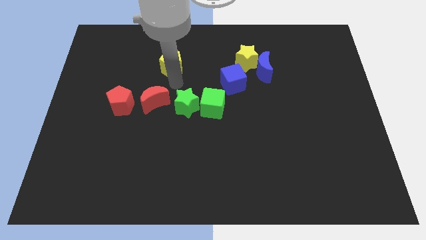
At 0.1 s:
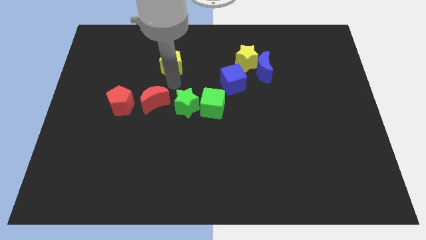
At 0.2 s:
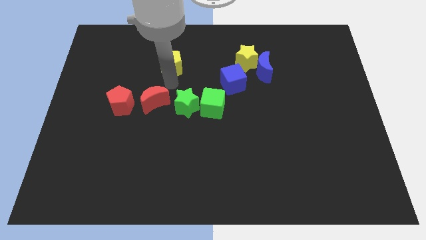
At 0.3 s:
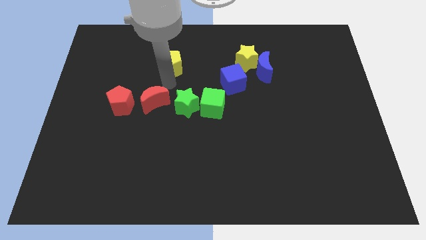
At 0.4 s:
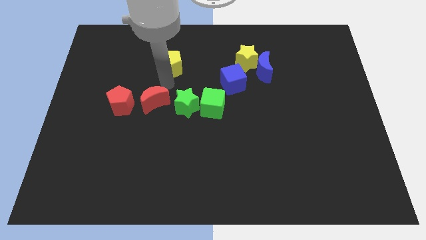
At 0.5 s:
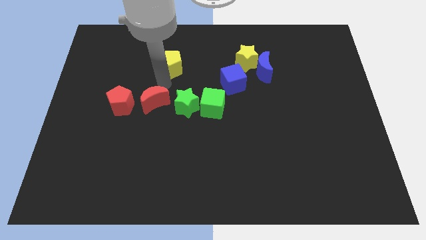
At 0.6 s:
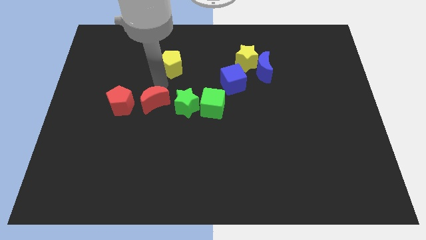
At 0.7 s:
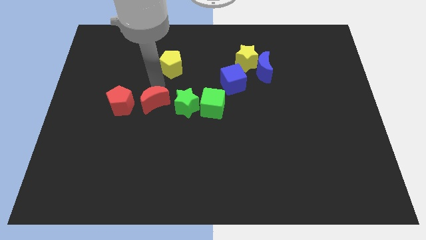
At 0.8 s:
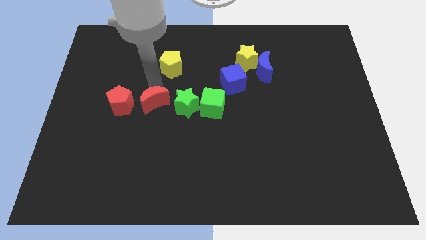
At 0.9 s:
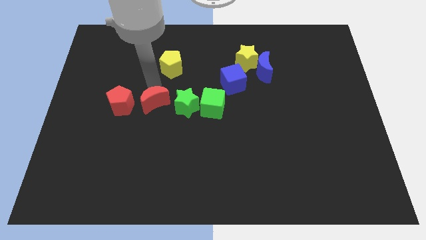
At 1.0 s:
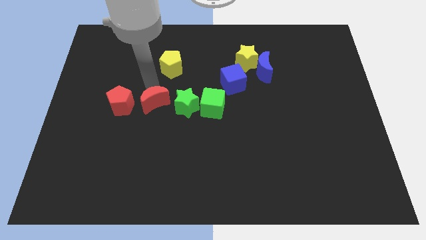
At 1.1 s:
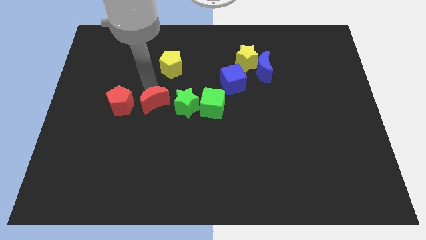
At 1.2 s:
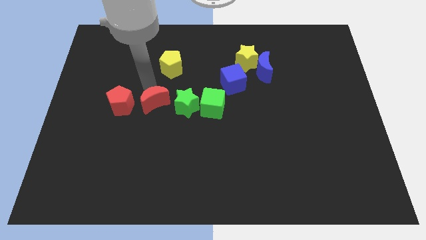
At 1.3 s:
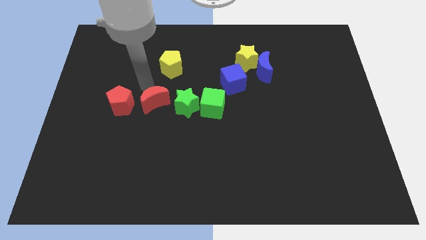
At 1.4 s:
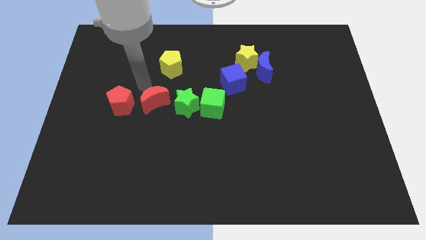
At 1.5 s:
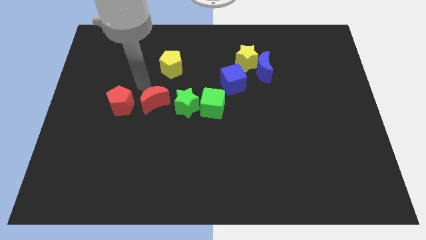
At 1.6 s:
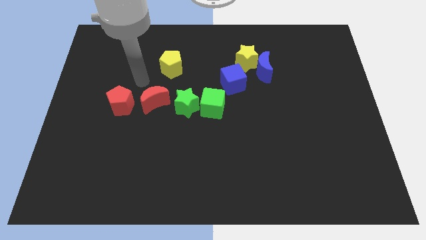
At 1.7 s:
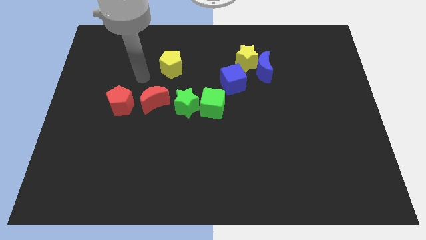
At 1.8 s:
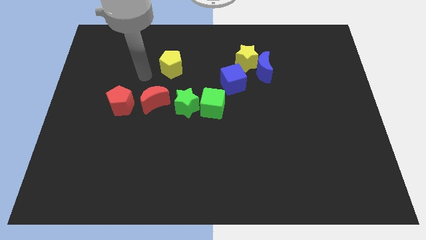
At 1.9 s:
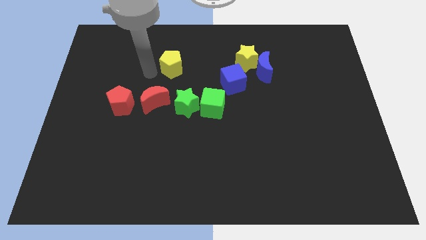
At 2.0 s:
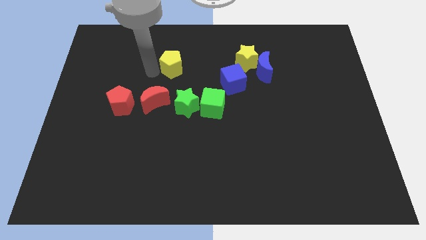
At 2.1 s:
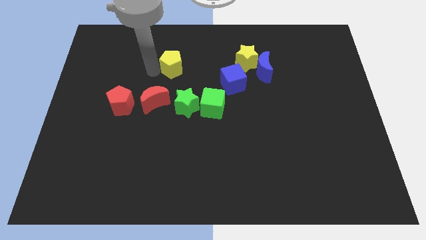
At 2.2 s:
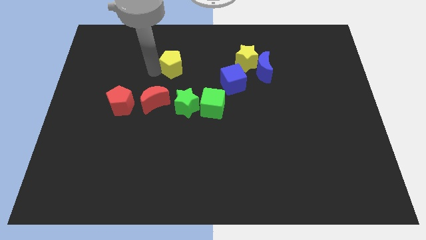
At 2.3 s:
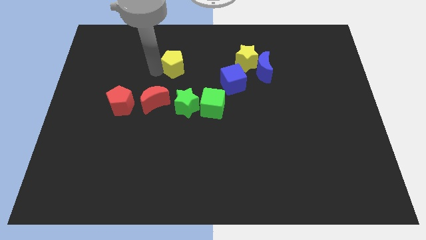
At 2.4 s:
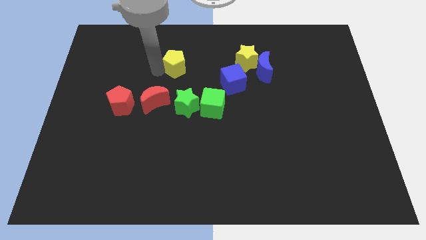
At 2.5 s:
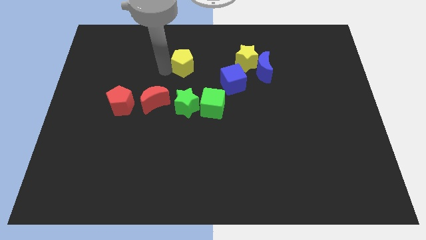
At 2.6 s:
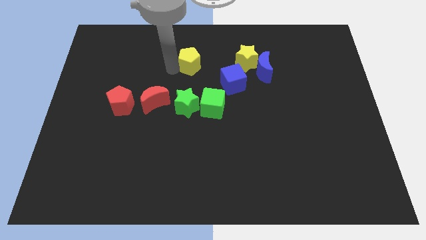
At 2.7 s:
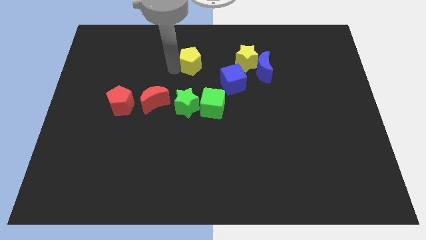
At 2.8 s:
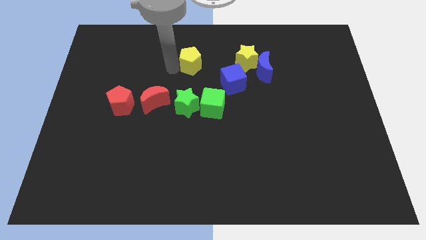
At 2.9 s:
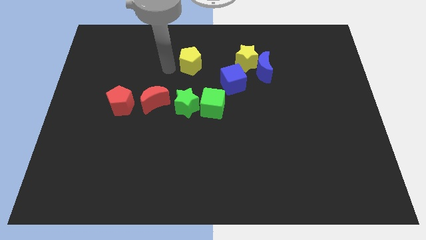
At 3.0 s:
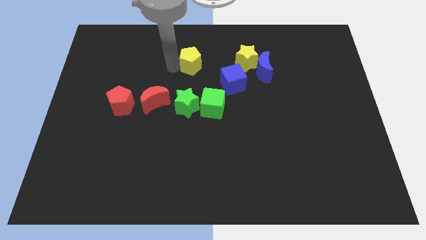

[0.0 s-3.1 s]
push the yellow pentagon vertically above the green star

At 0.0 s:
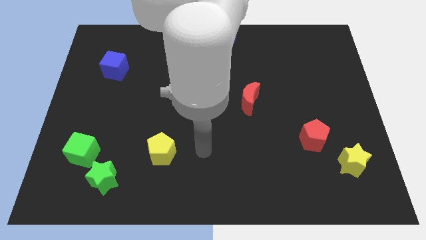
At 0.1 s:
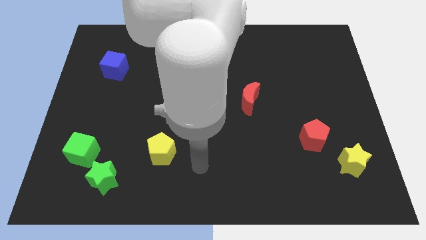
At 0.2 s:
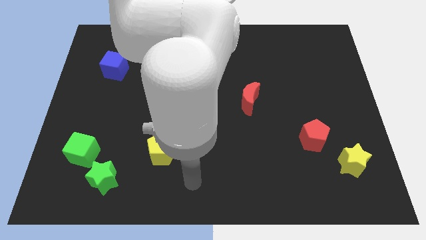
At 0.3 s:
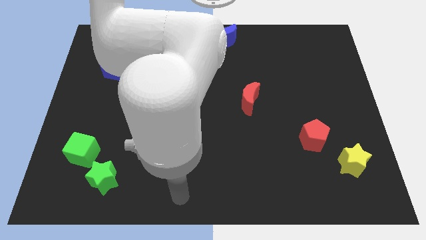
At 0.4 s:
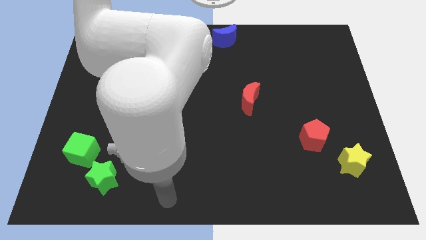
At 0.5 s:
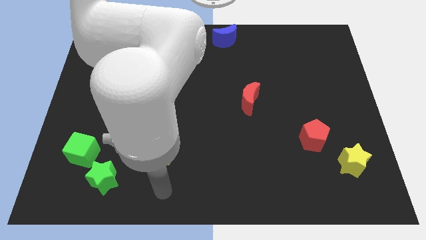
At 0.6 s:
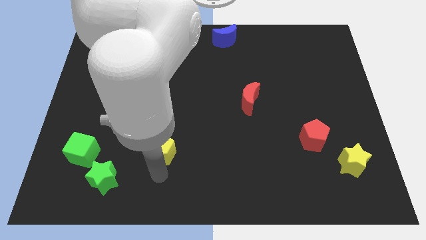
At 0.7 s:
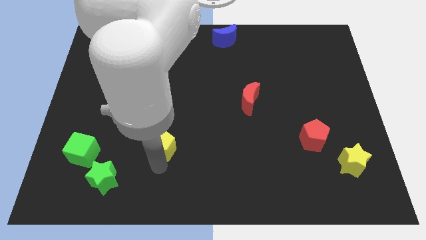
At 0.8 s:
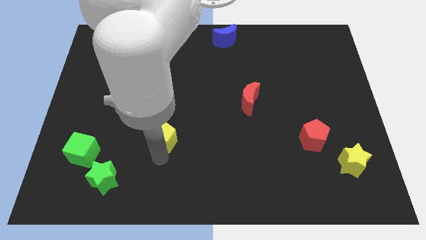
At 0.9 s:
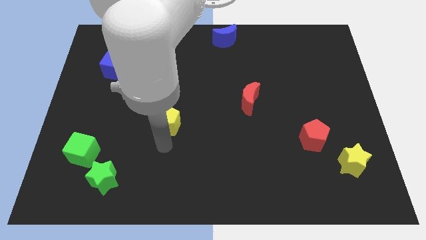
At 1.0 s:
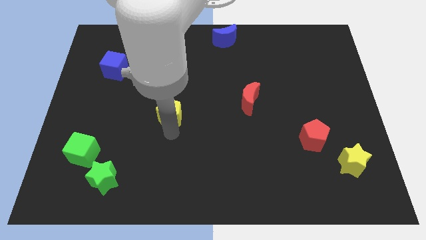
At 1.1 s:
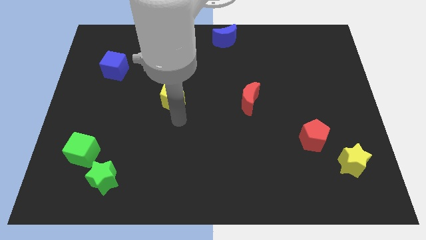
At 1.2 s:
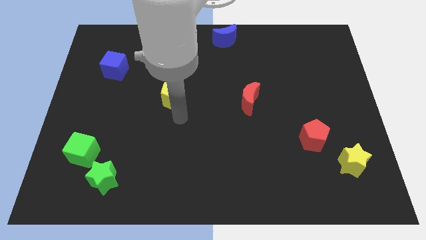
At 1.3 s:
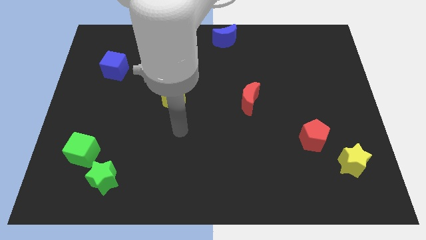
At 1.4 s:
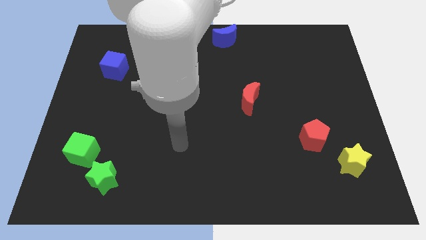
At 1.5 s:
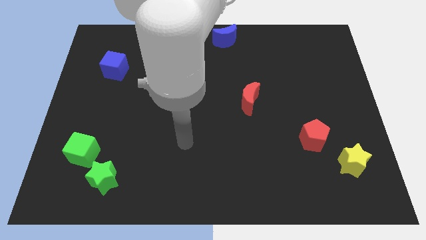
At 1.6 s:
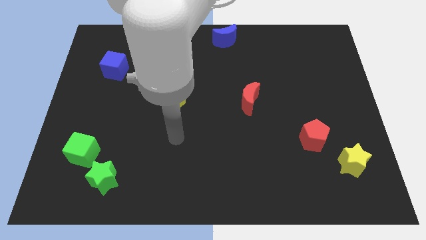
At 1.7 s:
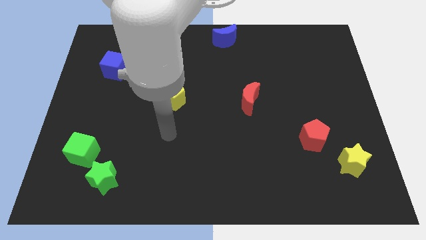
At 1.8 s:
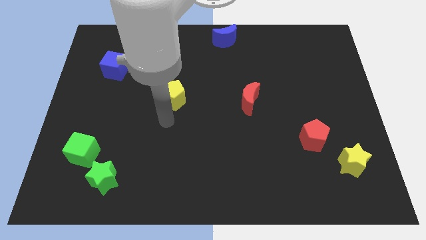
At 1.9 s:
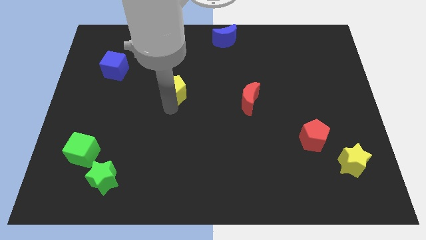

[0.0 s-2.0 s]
slide the yellow pentagon to the left of the red moon

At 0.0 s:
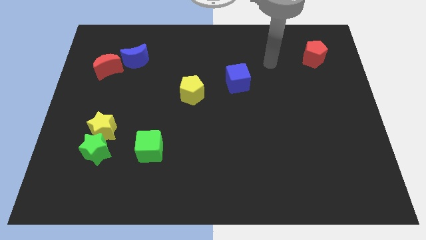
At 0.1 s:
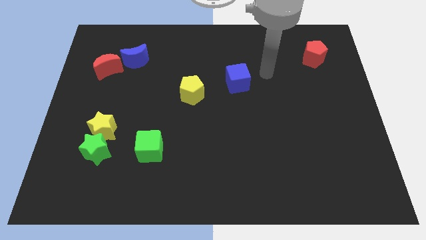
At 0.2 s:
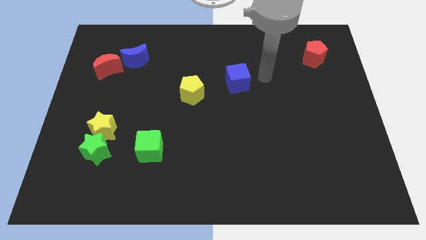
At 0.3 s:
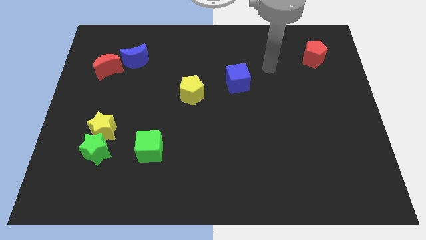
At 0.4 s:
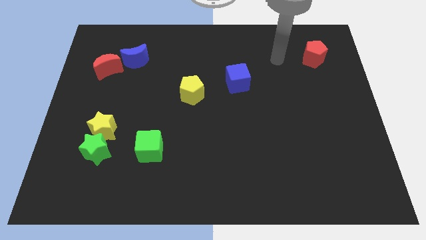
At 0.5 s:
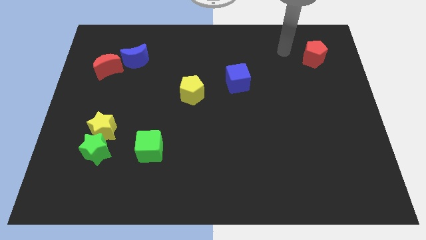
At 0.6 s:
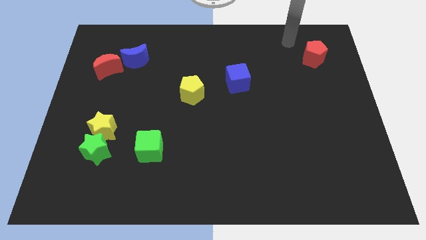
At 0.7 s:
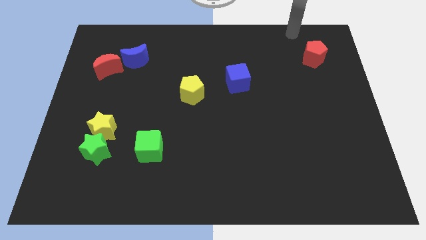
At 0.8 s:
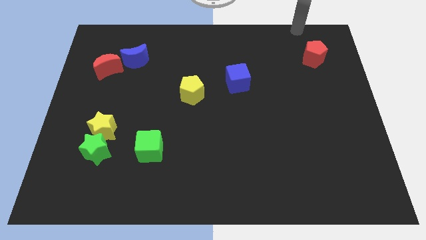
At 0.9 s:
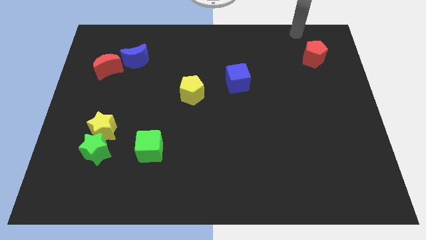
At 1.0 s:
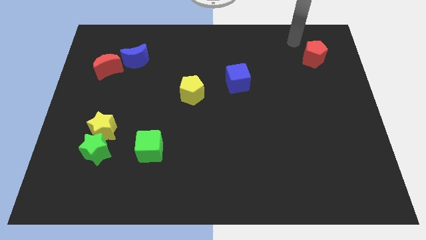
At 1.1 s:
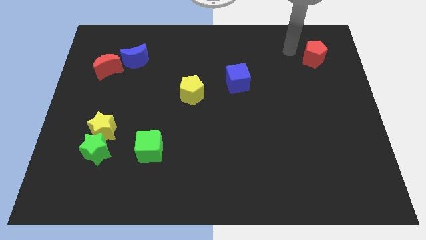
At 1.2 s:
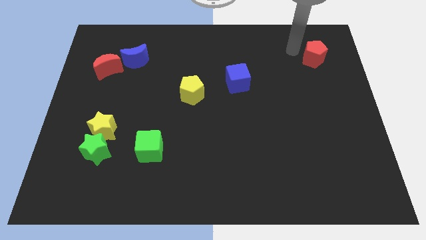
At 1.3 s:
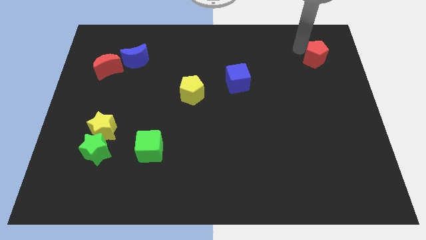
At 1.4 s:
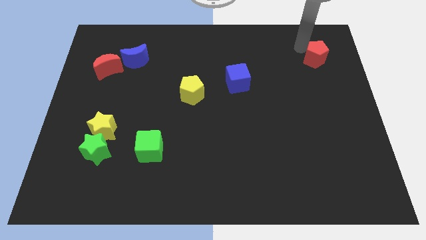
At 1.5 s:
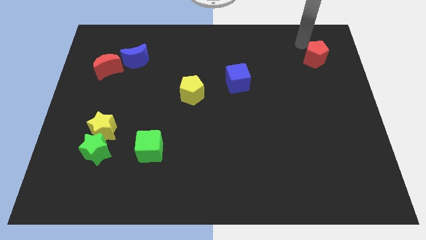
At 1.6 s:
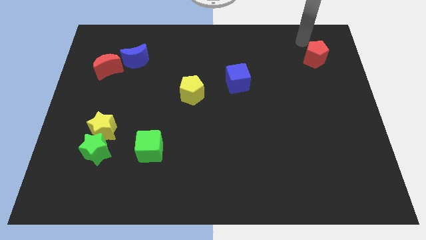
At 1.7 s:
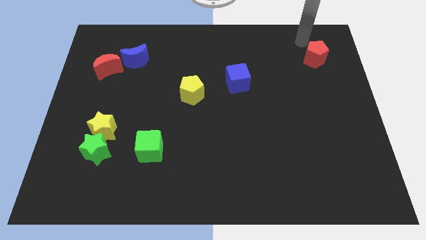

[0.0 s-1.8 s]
go and tap the red pentagon

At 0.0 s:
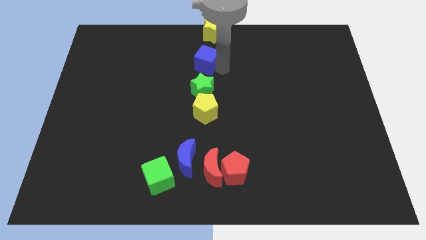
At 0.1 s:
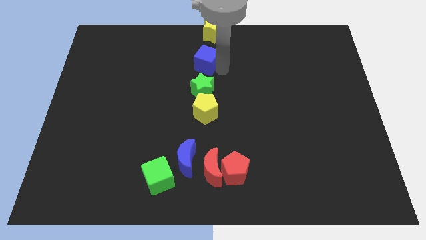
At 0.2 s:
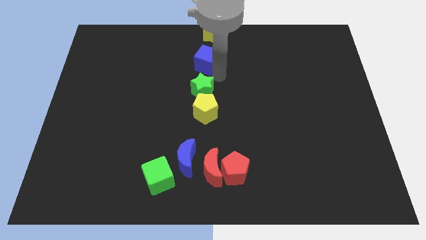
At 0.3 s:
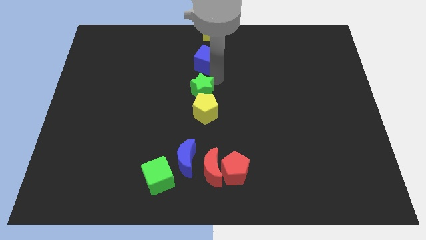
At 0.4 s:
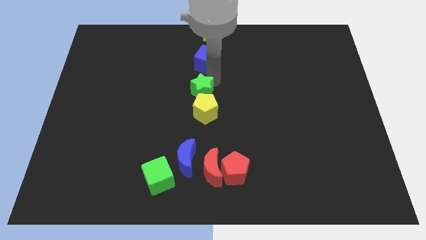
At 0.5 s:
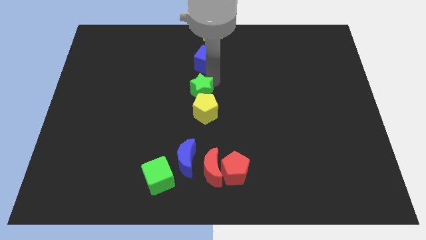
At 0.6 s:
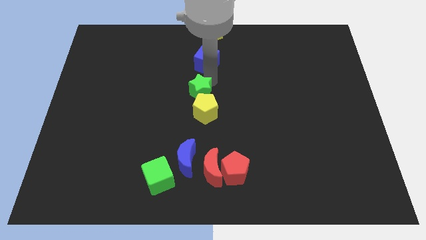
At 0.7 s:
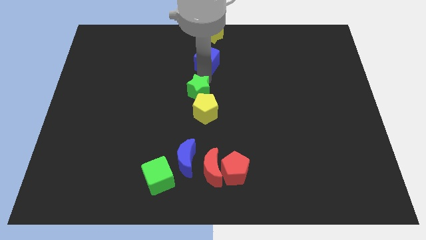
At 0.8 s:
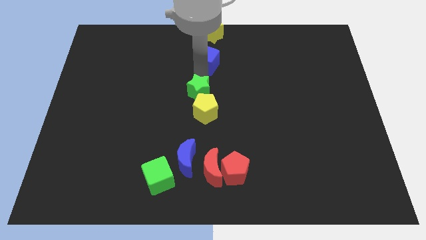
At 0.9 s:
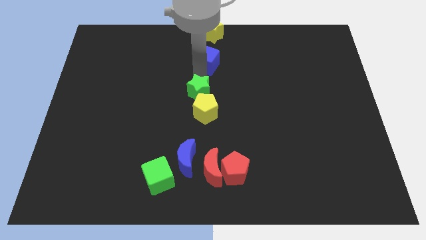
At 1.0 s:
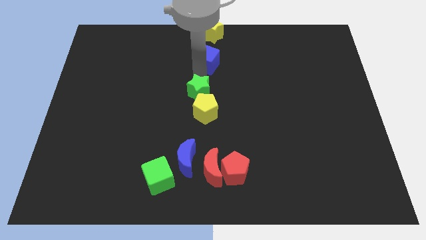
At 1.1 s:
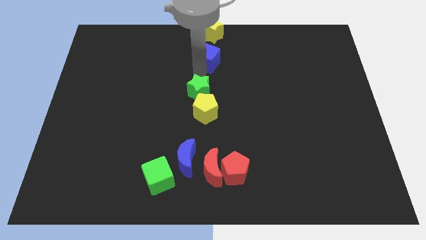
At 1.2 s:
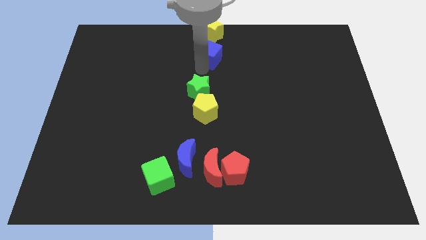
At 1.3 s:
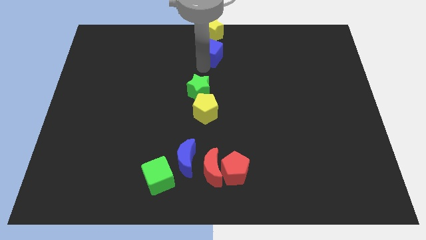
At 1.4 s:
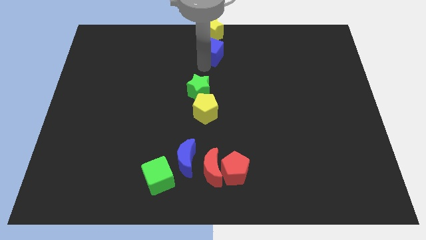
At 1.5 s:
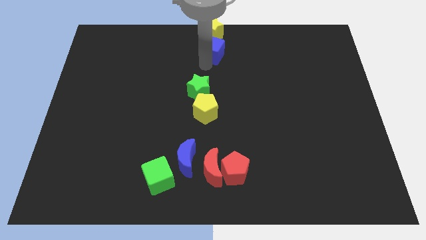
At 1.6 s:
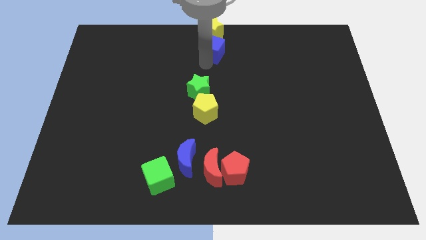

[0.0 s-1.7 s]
push the blue cube slightly to the top

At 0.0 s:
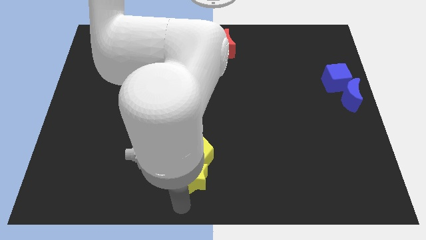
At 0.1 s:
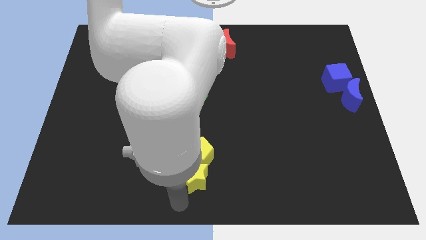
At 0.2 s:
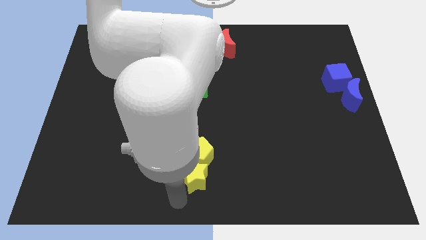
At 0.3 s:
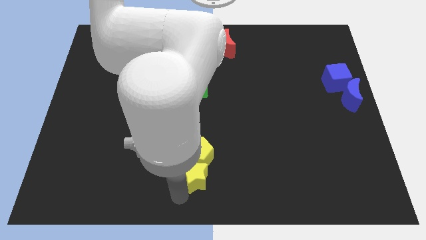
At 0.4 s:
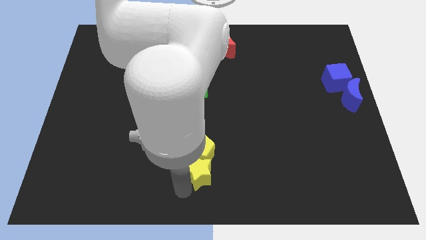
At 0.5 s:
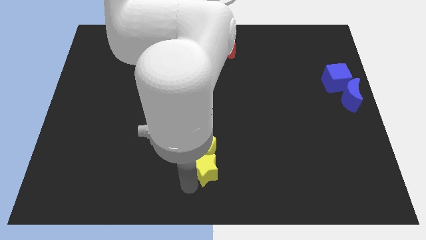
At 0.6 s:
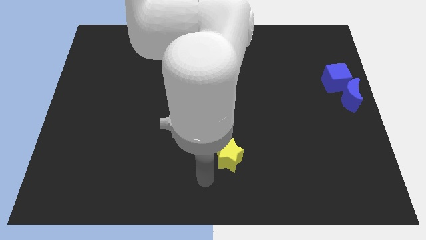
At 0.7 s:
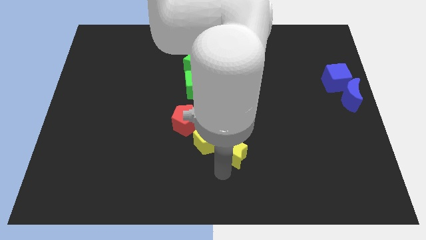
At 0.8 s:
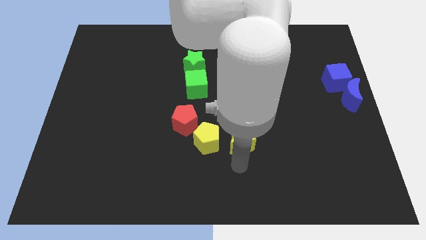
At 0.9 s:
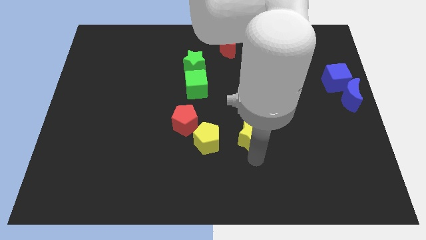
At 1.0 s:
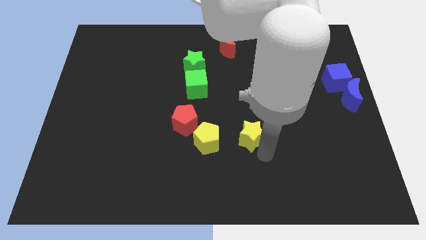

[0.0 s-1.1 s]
separate yellow blocks from each other
